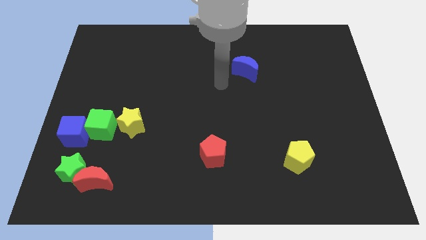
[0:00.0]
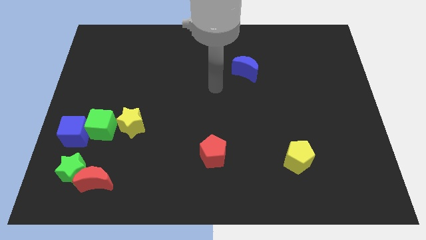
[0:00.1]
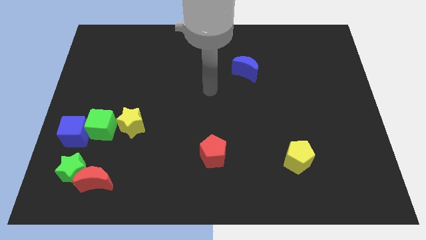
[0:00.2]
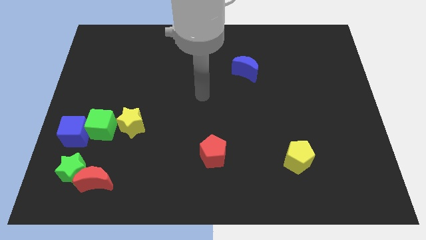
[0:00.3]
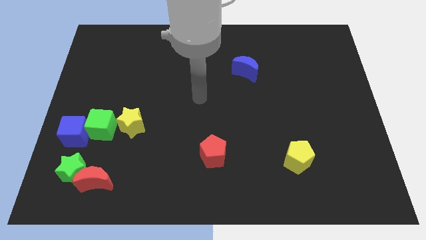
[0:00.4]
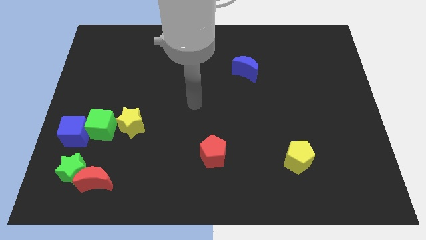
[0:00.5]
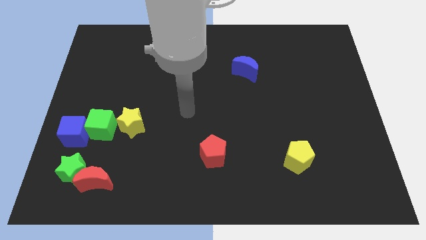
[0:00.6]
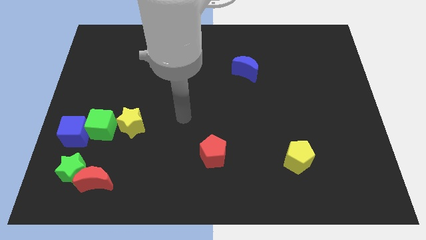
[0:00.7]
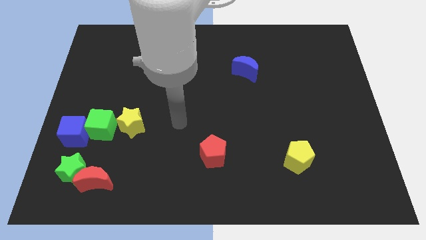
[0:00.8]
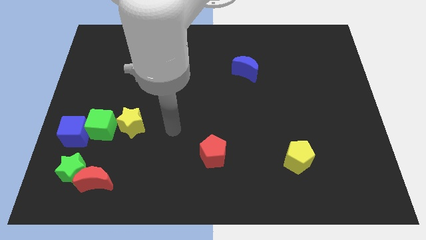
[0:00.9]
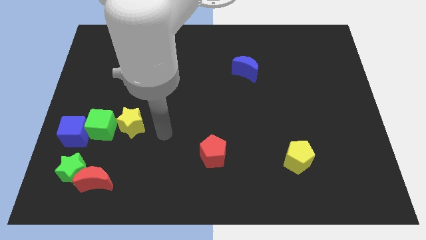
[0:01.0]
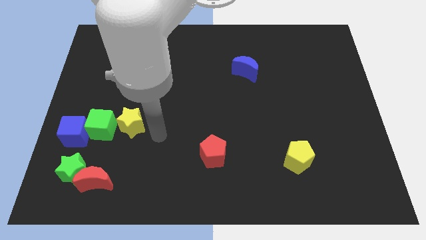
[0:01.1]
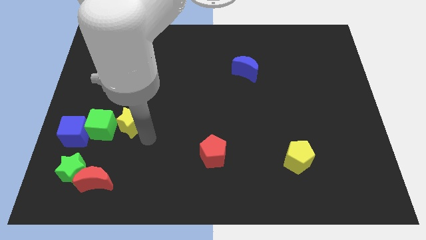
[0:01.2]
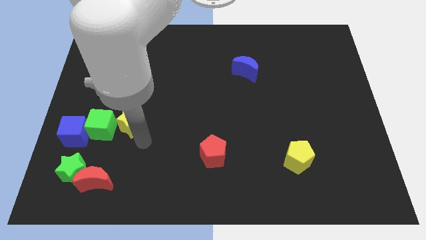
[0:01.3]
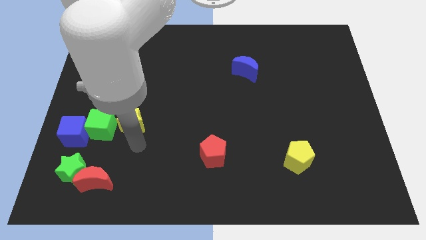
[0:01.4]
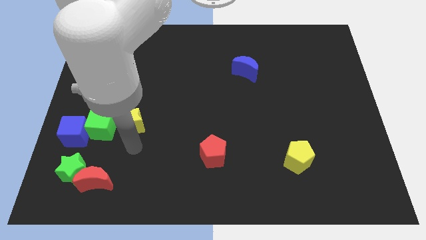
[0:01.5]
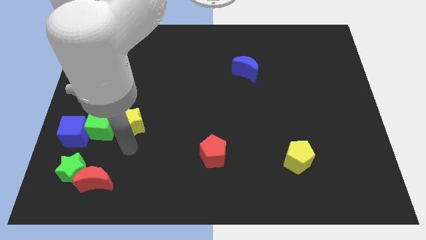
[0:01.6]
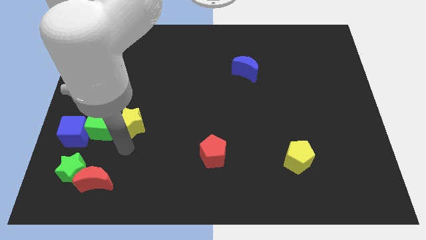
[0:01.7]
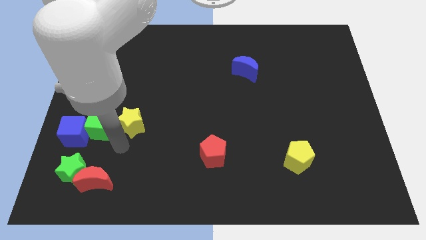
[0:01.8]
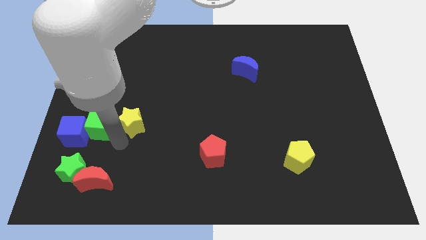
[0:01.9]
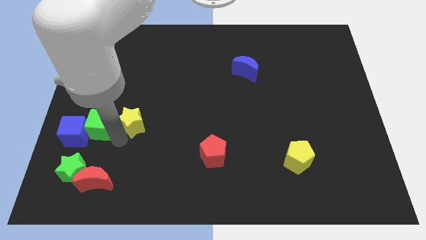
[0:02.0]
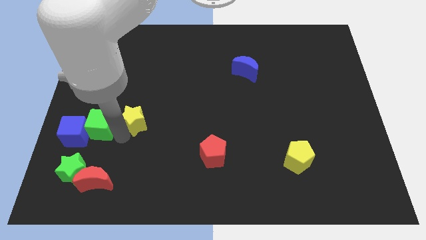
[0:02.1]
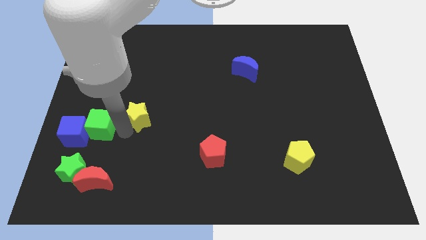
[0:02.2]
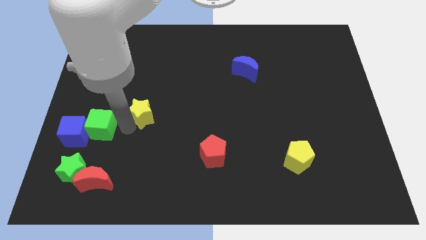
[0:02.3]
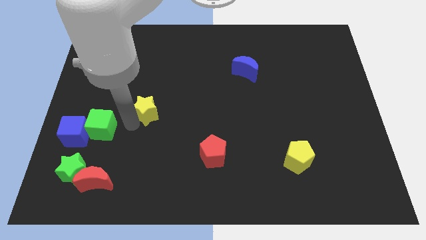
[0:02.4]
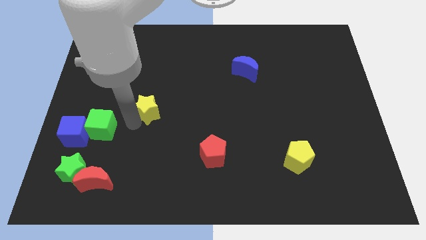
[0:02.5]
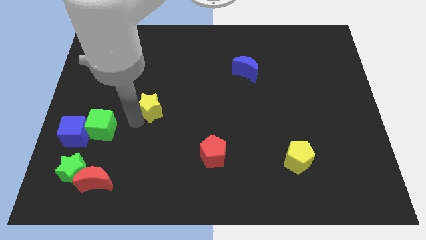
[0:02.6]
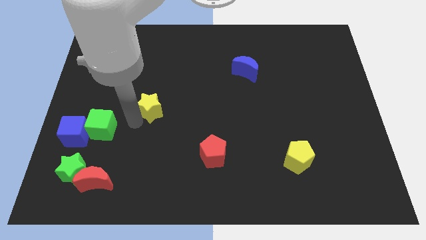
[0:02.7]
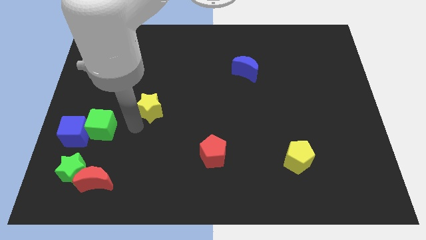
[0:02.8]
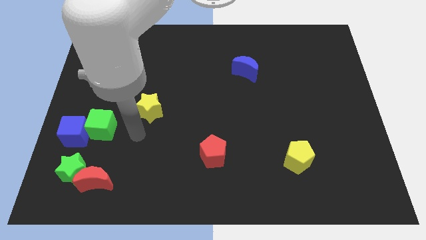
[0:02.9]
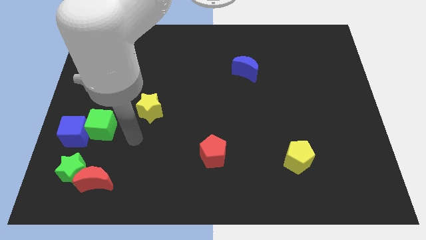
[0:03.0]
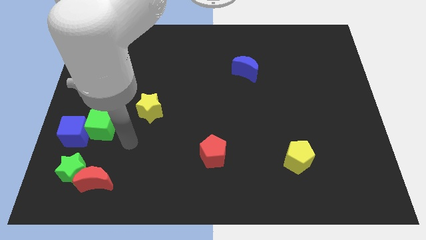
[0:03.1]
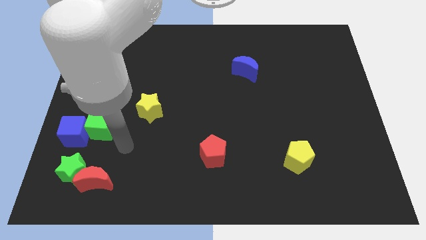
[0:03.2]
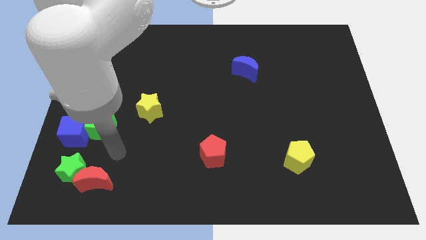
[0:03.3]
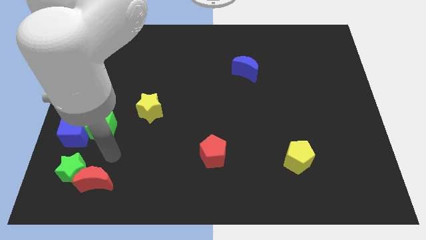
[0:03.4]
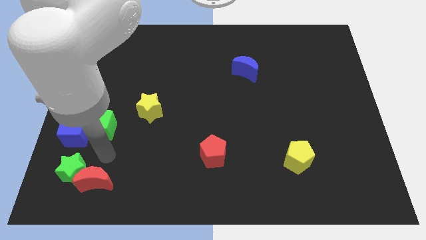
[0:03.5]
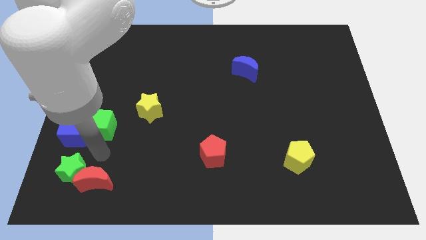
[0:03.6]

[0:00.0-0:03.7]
push the yellow star away from the green cube

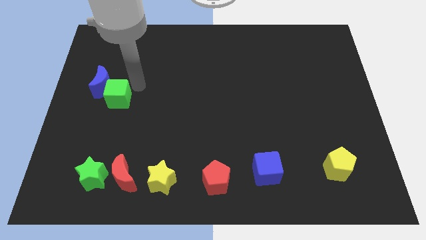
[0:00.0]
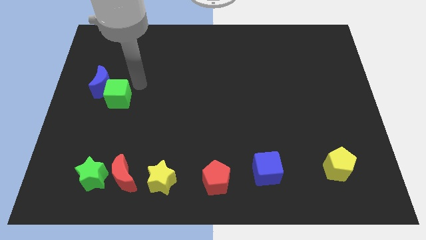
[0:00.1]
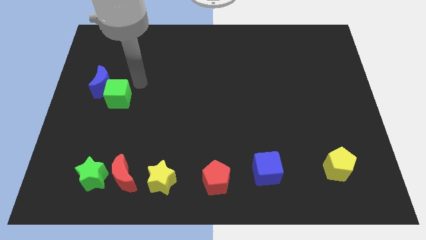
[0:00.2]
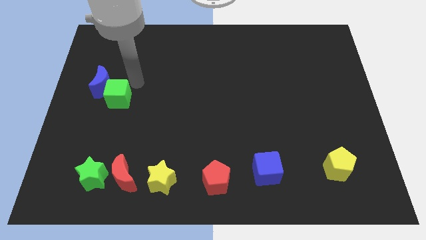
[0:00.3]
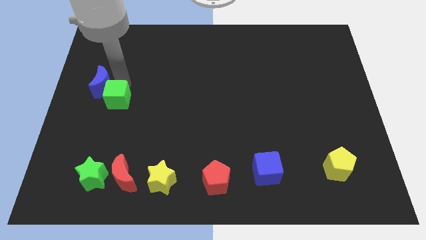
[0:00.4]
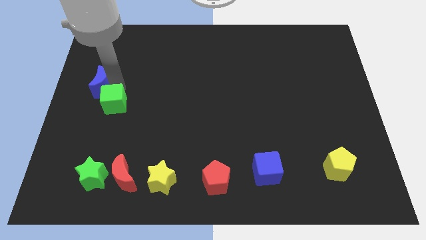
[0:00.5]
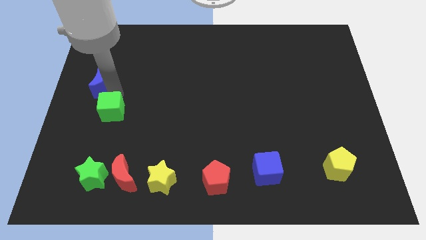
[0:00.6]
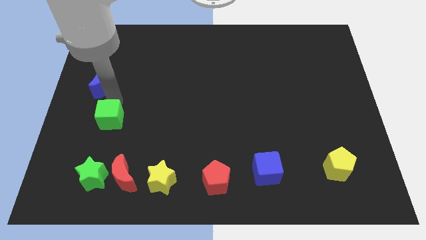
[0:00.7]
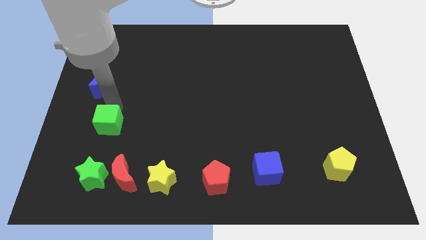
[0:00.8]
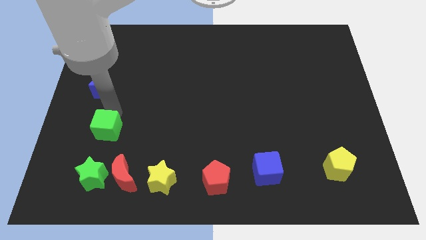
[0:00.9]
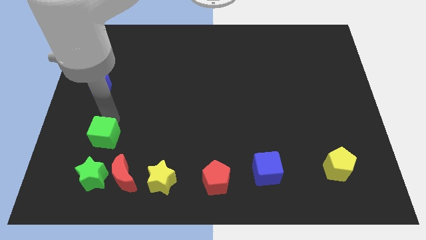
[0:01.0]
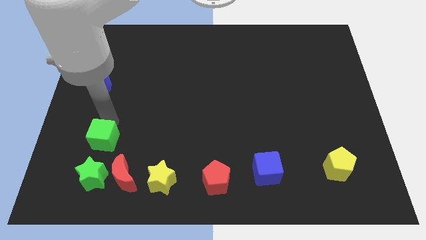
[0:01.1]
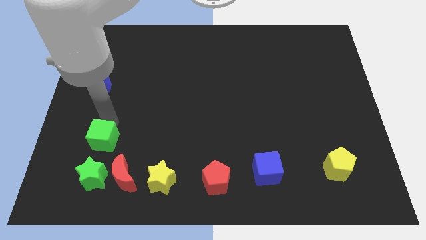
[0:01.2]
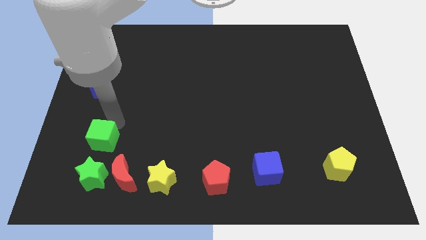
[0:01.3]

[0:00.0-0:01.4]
place the green cube on top of green star

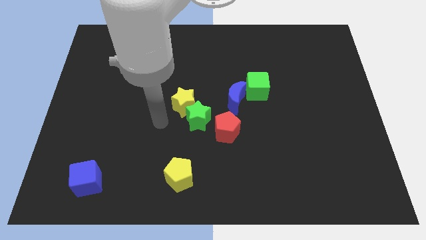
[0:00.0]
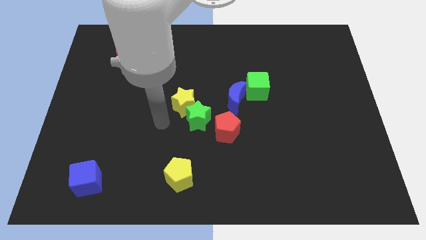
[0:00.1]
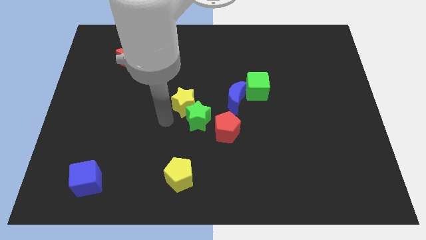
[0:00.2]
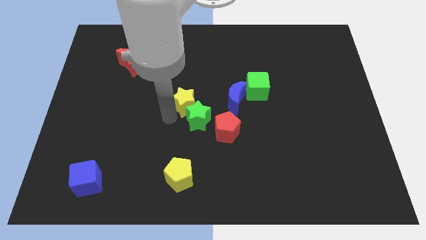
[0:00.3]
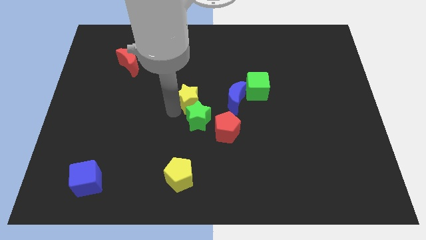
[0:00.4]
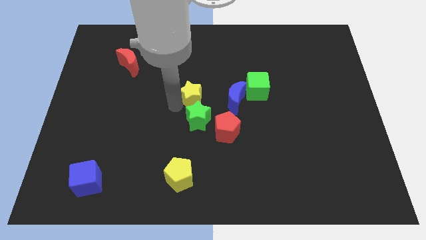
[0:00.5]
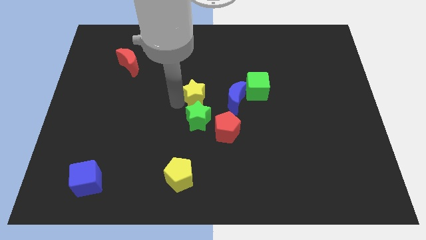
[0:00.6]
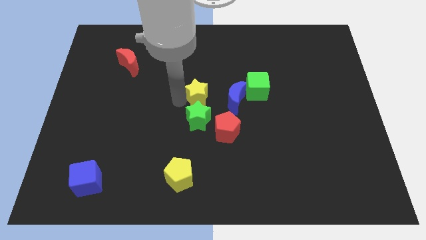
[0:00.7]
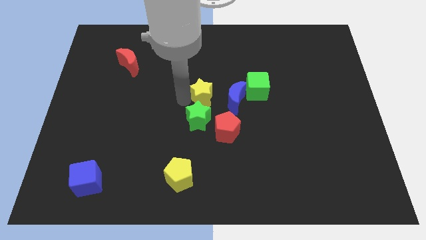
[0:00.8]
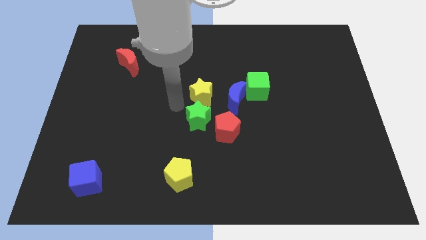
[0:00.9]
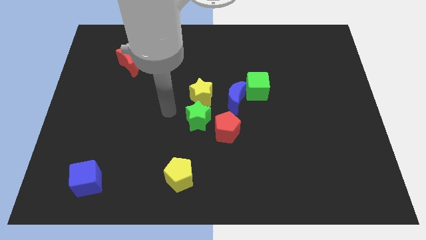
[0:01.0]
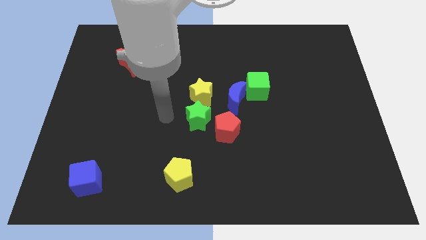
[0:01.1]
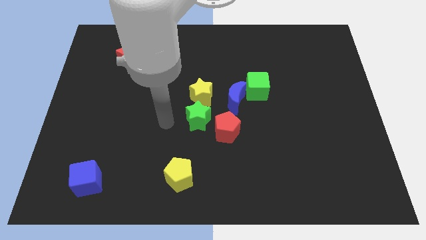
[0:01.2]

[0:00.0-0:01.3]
move the yellow star to the top side of the green star

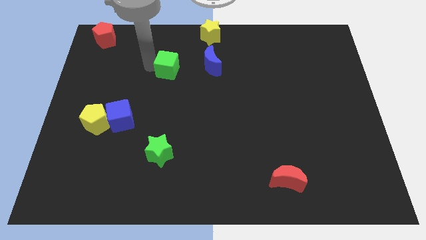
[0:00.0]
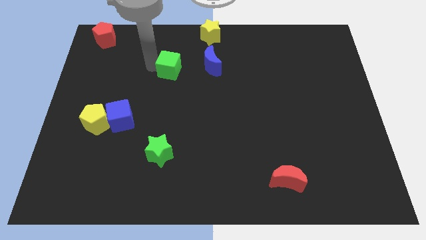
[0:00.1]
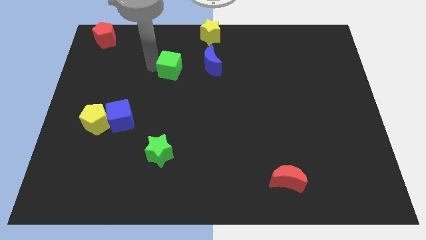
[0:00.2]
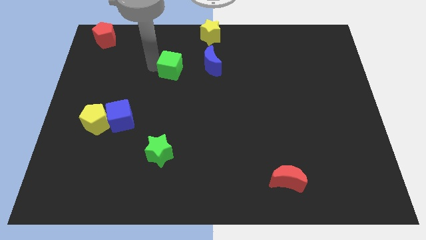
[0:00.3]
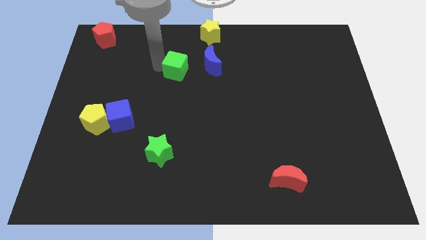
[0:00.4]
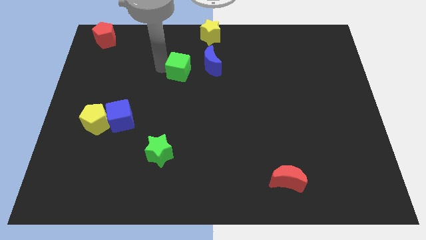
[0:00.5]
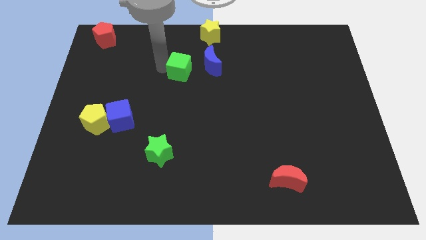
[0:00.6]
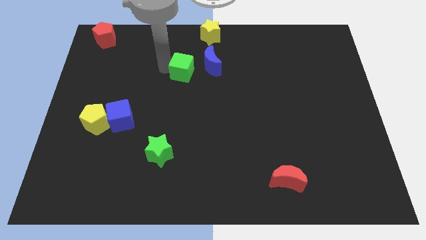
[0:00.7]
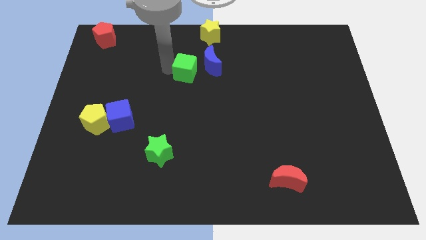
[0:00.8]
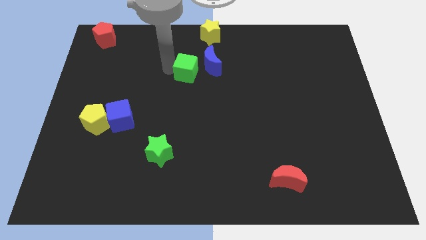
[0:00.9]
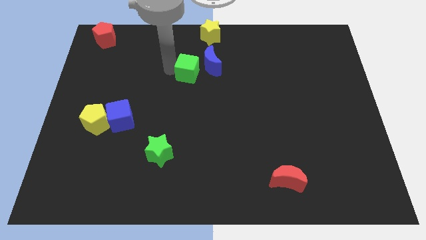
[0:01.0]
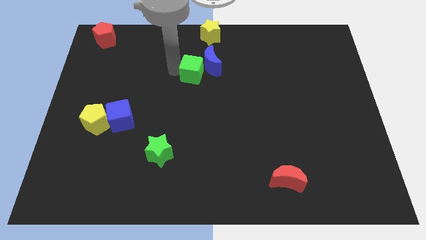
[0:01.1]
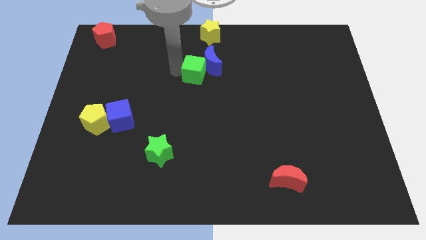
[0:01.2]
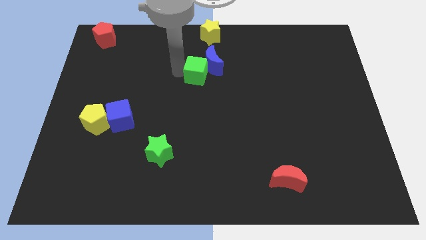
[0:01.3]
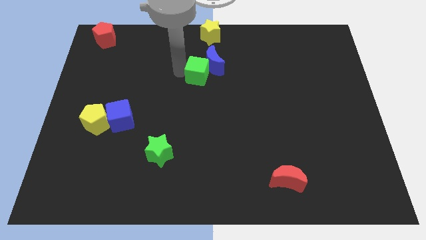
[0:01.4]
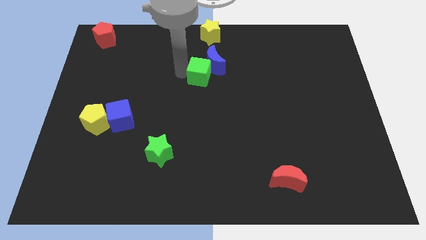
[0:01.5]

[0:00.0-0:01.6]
slide the green cube into the blue crescent

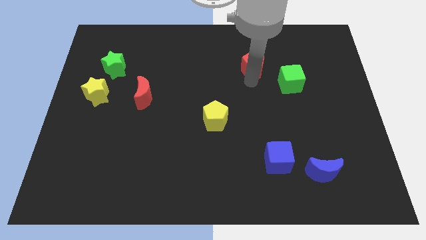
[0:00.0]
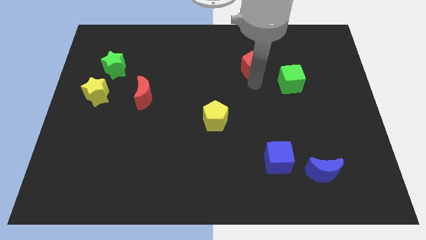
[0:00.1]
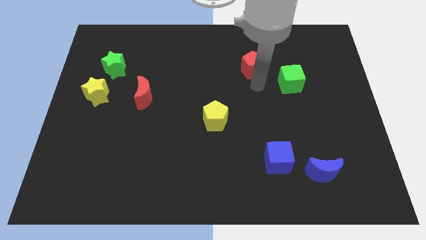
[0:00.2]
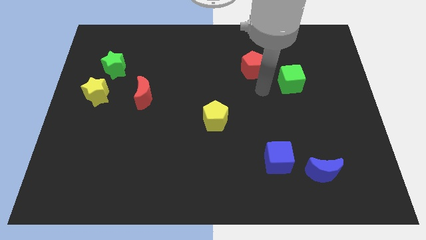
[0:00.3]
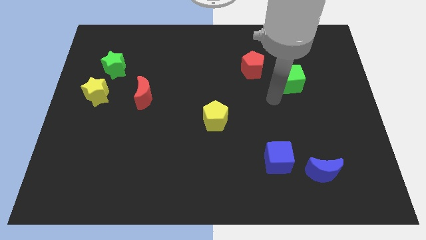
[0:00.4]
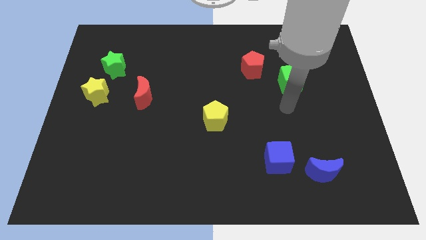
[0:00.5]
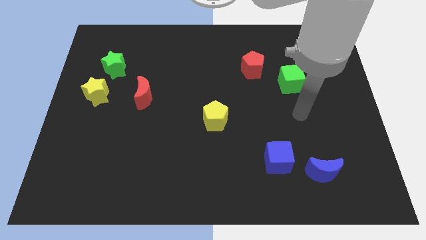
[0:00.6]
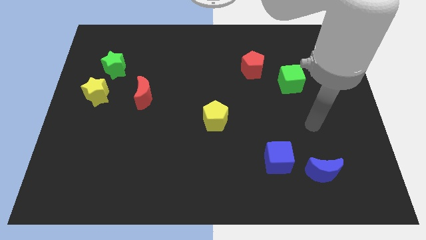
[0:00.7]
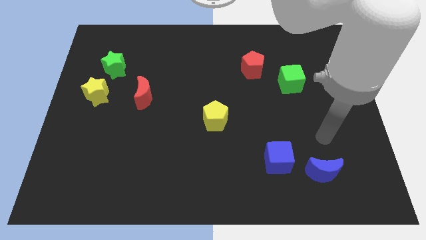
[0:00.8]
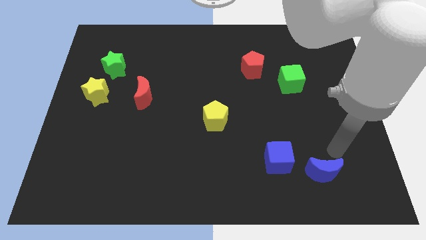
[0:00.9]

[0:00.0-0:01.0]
move your arm away from red pentagon
